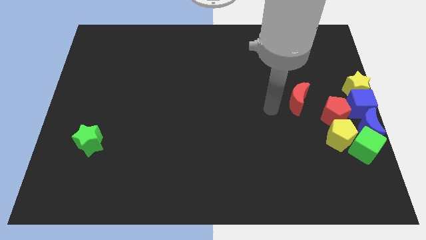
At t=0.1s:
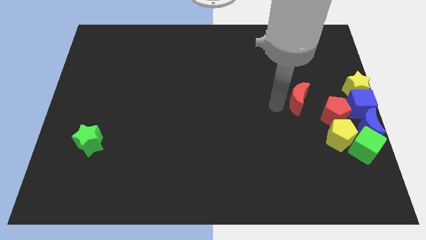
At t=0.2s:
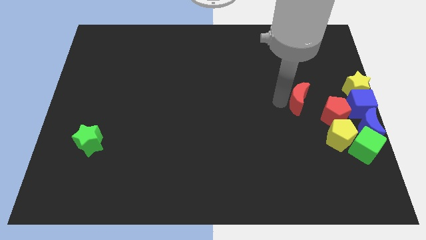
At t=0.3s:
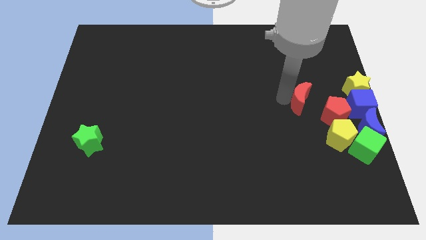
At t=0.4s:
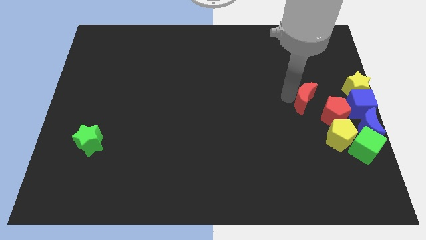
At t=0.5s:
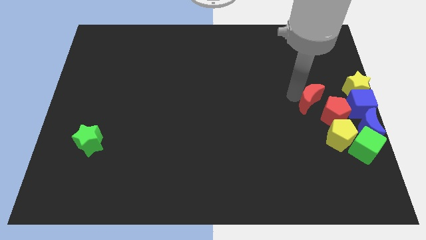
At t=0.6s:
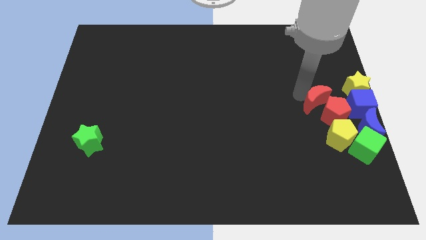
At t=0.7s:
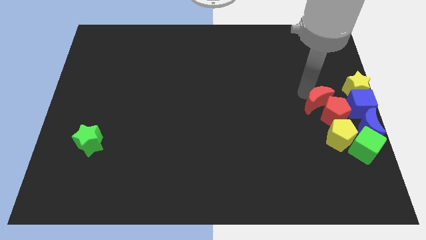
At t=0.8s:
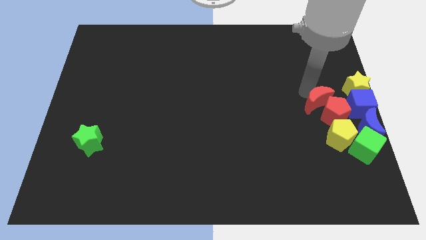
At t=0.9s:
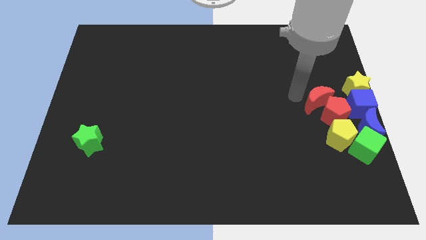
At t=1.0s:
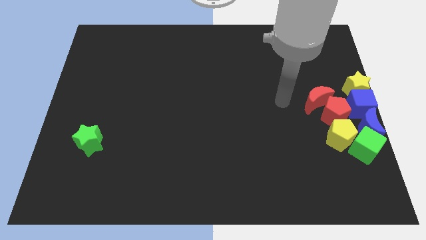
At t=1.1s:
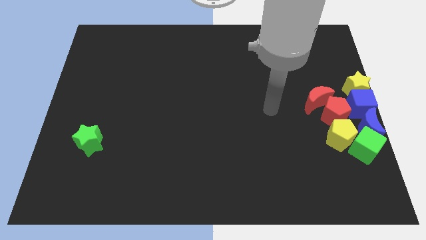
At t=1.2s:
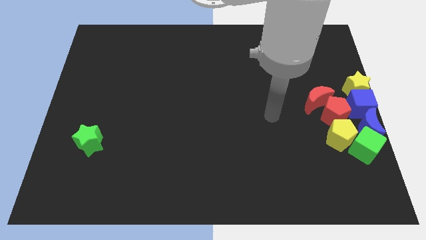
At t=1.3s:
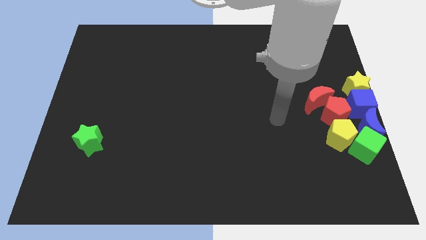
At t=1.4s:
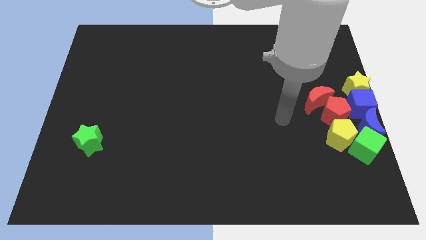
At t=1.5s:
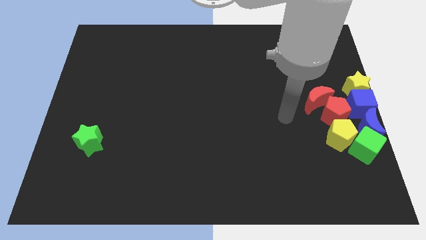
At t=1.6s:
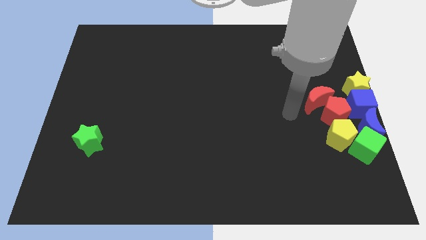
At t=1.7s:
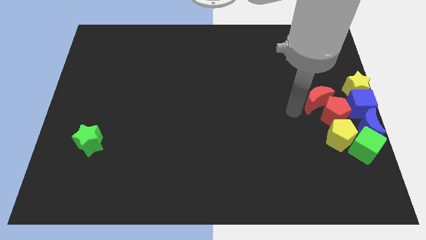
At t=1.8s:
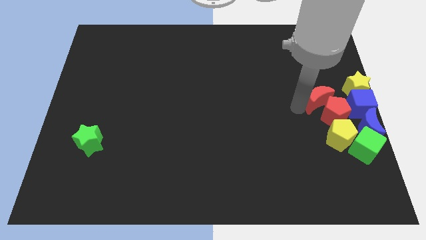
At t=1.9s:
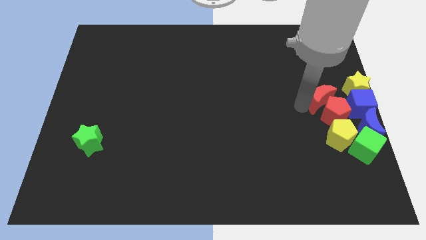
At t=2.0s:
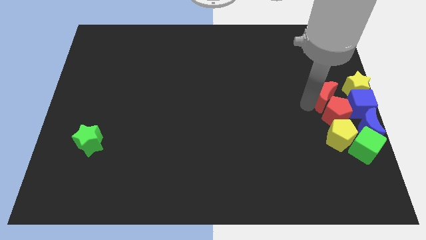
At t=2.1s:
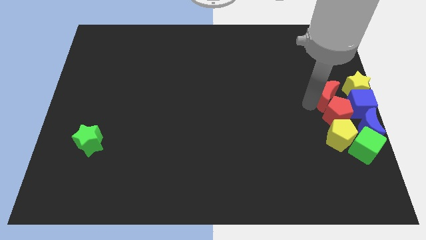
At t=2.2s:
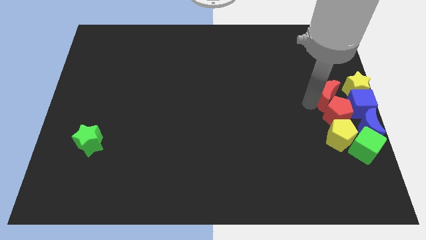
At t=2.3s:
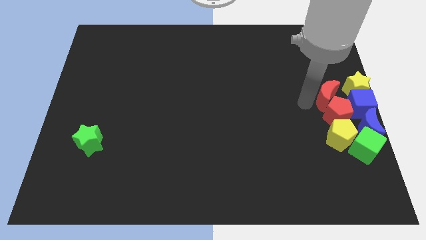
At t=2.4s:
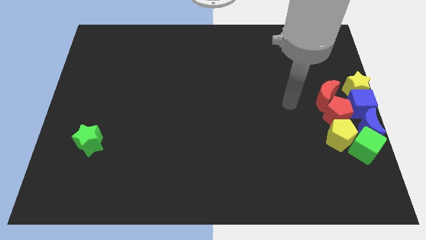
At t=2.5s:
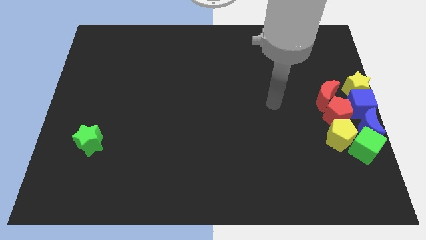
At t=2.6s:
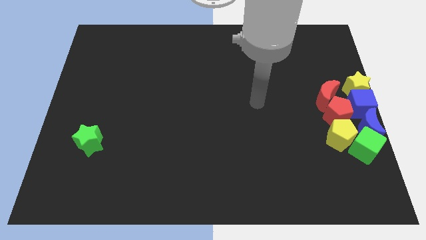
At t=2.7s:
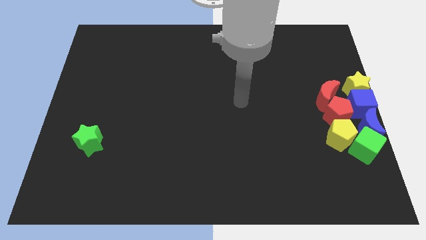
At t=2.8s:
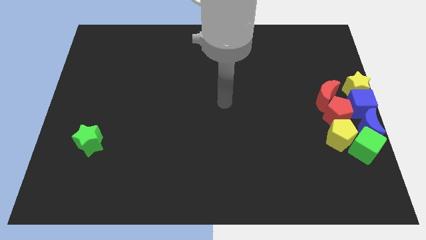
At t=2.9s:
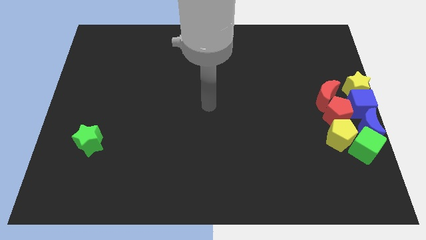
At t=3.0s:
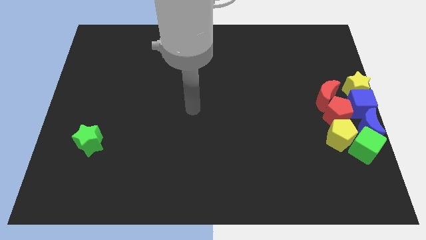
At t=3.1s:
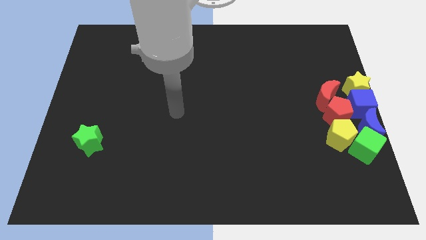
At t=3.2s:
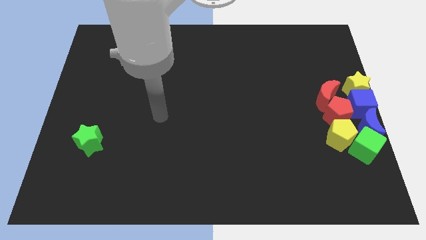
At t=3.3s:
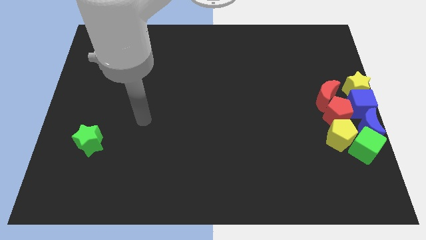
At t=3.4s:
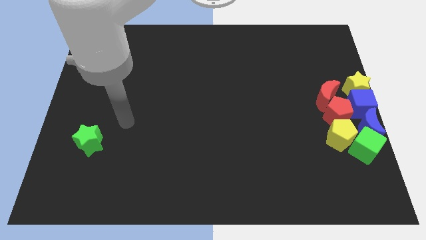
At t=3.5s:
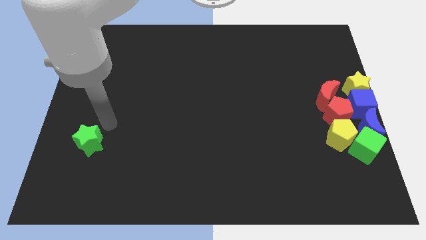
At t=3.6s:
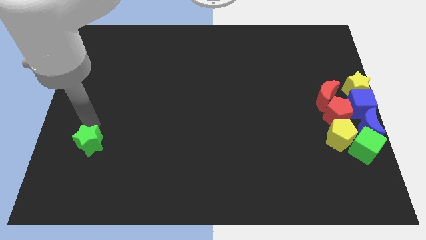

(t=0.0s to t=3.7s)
place your arm to the top of green star

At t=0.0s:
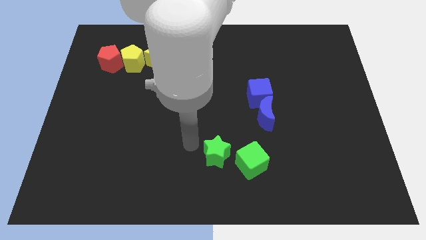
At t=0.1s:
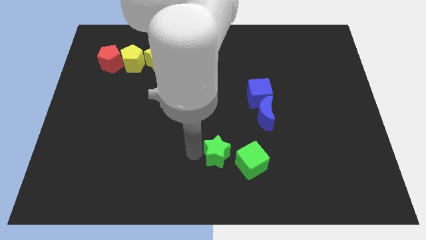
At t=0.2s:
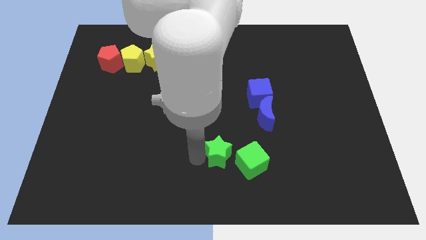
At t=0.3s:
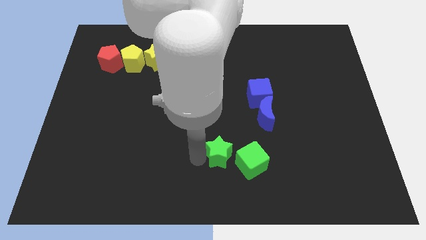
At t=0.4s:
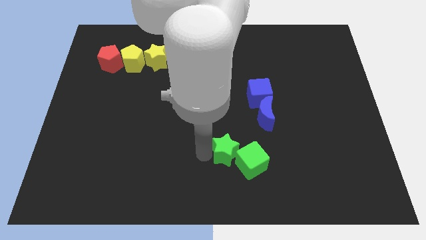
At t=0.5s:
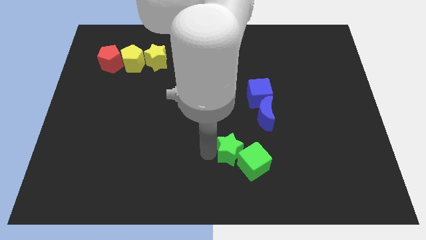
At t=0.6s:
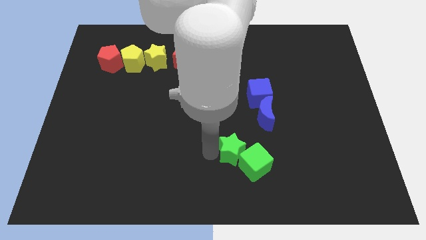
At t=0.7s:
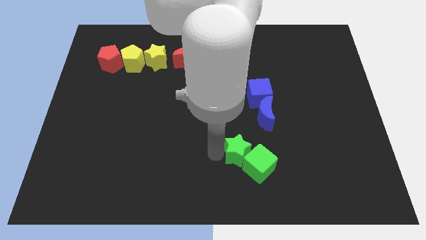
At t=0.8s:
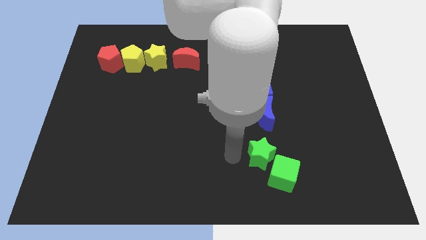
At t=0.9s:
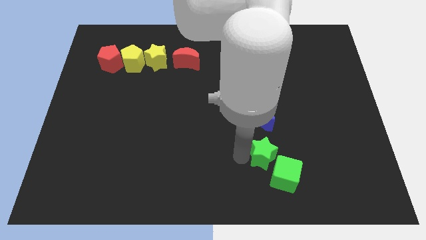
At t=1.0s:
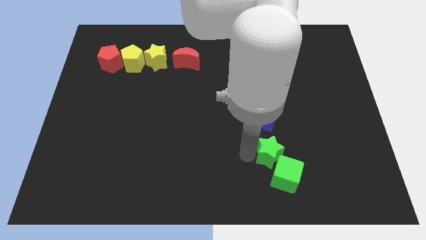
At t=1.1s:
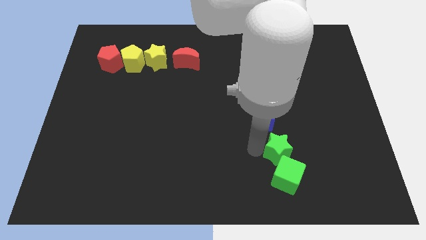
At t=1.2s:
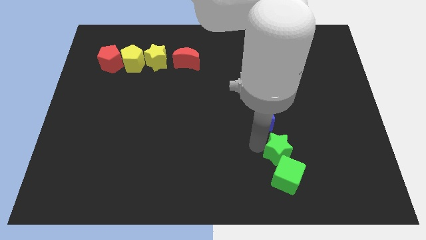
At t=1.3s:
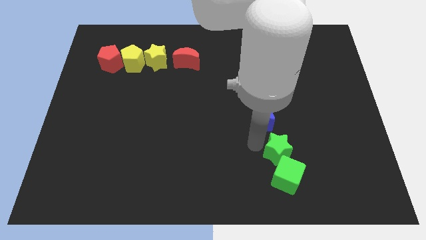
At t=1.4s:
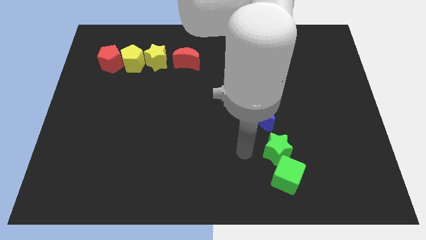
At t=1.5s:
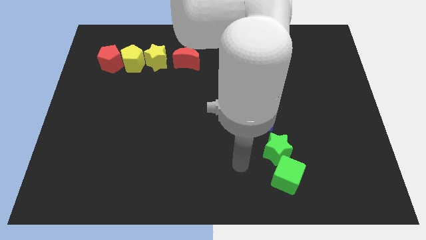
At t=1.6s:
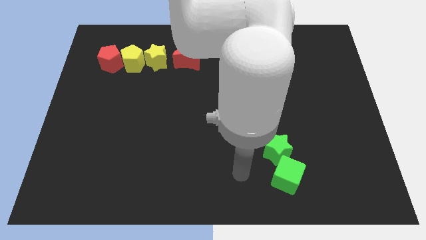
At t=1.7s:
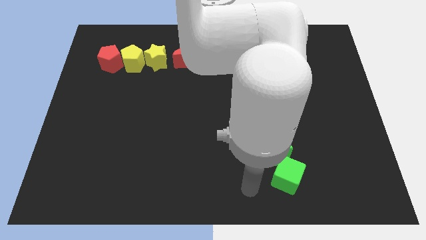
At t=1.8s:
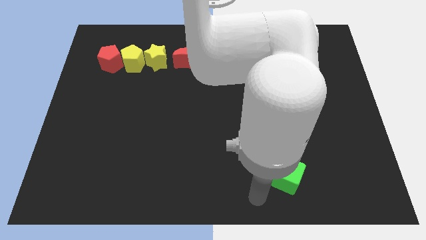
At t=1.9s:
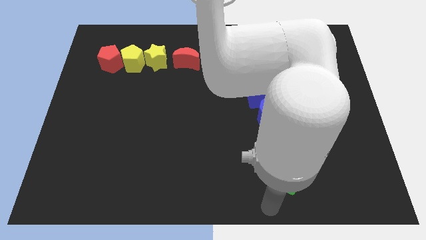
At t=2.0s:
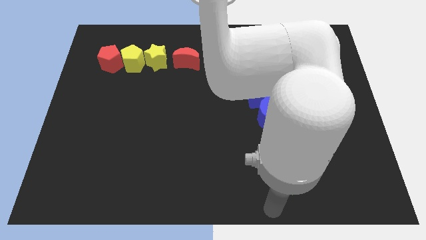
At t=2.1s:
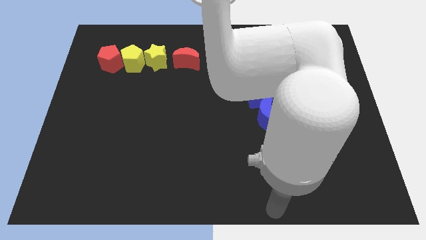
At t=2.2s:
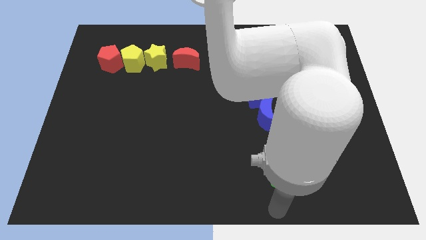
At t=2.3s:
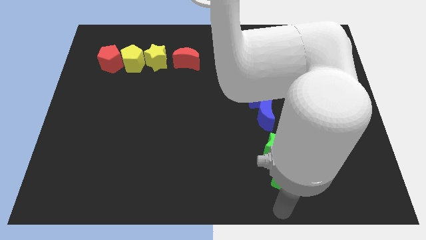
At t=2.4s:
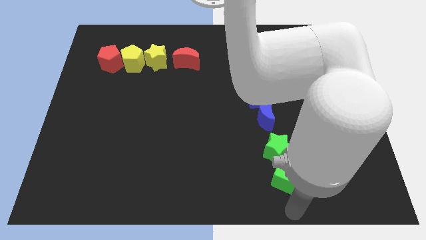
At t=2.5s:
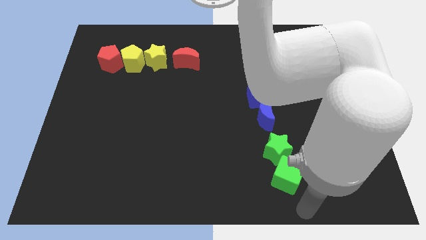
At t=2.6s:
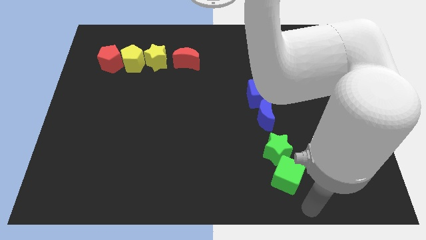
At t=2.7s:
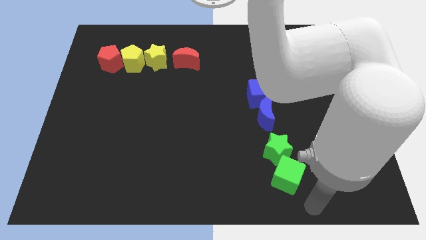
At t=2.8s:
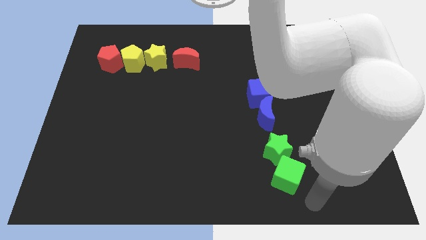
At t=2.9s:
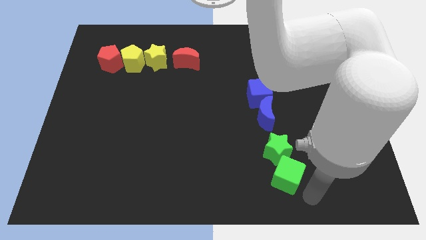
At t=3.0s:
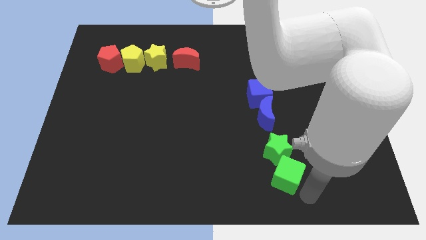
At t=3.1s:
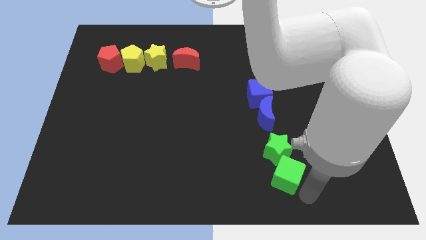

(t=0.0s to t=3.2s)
move green blocks vertically below the blue blocks

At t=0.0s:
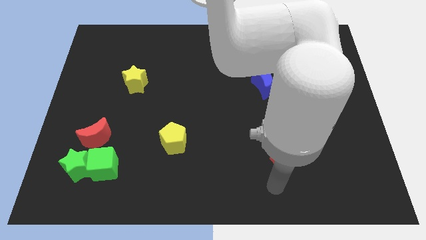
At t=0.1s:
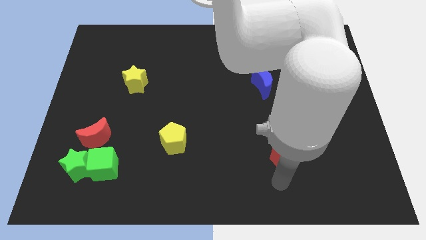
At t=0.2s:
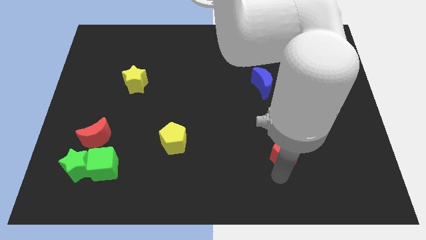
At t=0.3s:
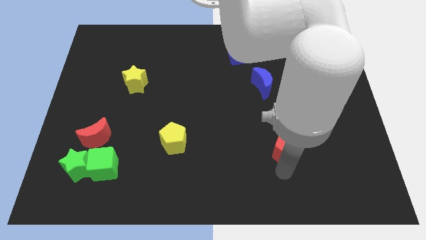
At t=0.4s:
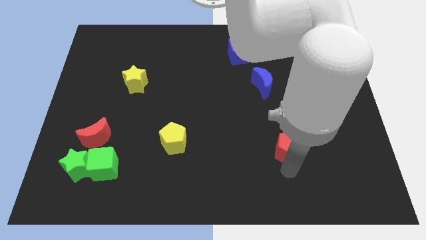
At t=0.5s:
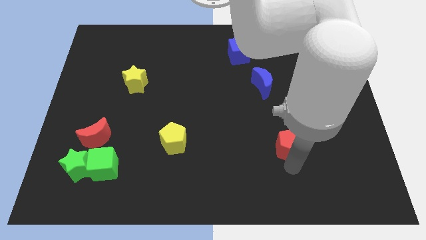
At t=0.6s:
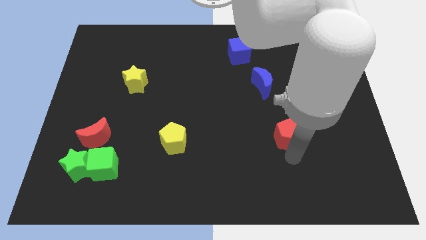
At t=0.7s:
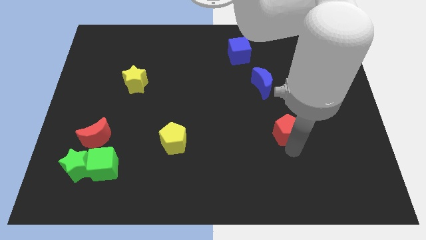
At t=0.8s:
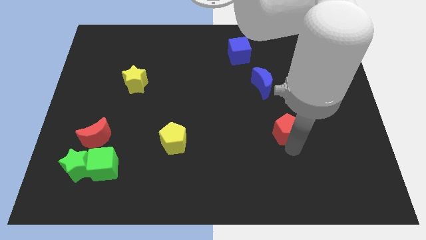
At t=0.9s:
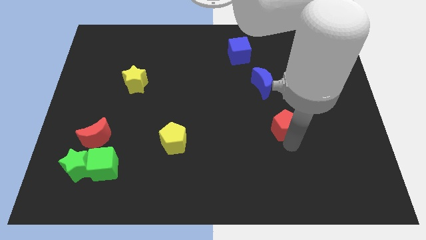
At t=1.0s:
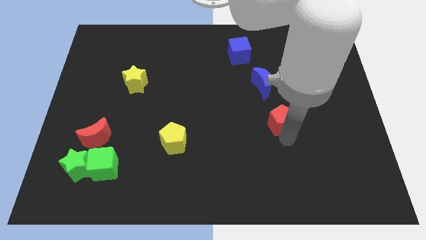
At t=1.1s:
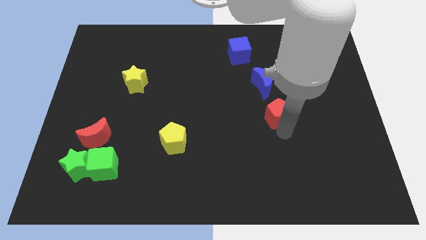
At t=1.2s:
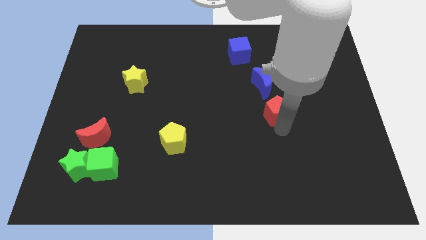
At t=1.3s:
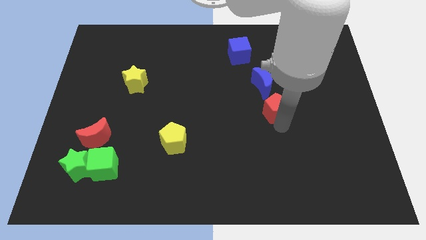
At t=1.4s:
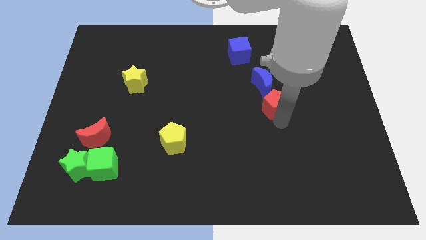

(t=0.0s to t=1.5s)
place the red pentagon below the blue moon

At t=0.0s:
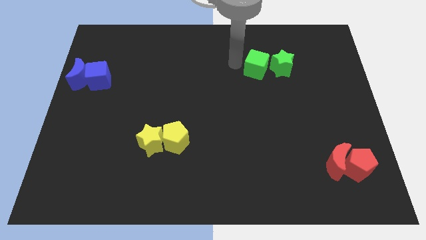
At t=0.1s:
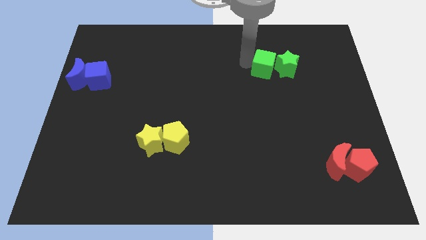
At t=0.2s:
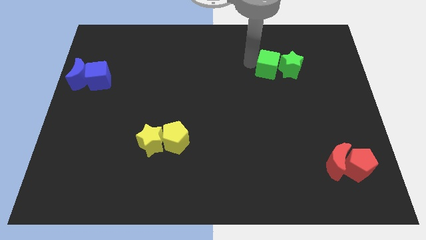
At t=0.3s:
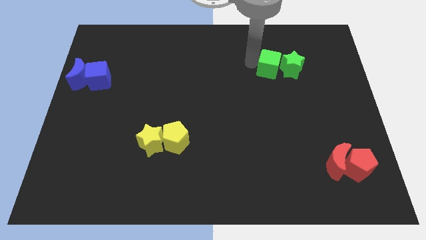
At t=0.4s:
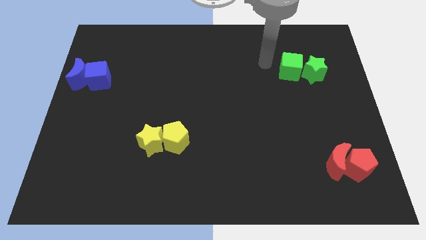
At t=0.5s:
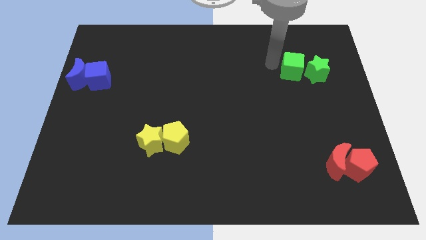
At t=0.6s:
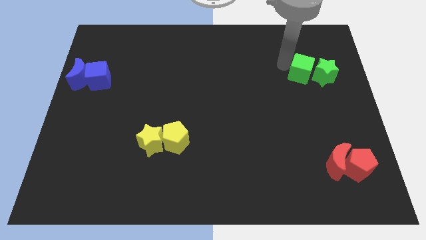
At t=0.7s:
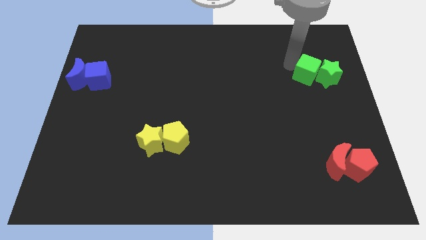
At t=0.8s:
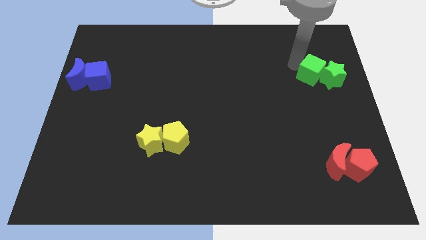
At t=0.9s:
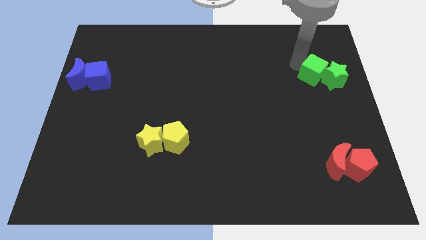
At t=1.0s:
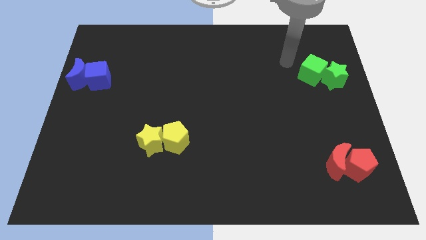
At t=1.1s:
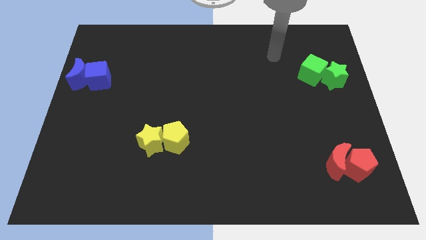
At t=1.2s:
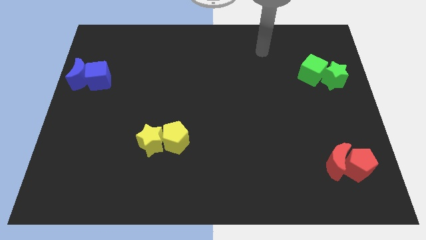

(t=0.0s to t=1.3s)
push the green cube into the green star
